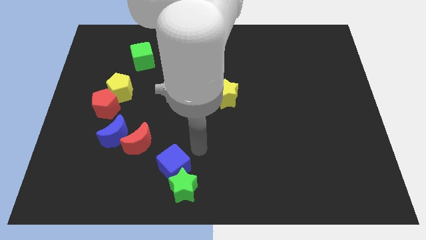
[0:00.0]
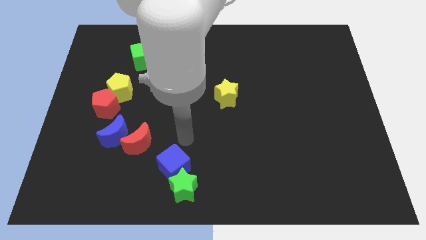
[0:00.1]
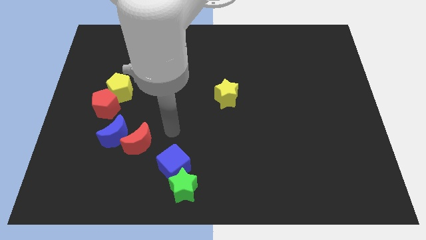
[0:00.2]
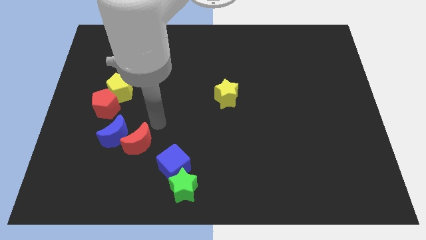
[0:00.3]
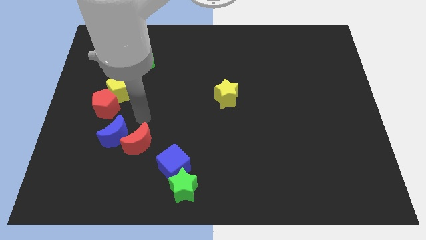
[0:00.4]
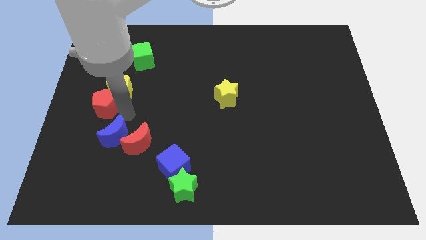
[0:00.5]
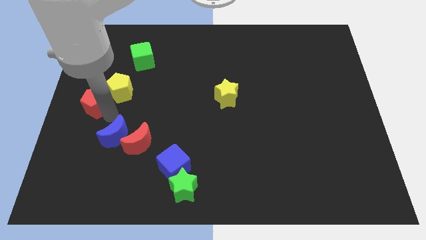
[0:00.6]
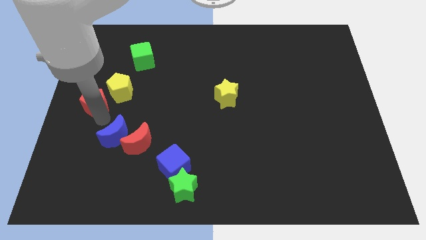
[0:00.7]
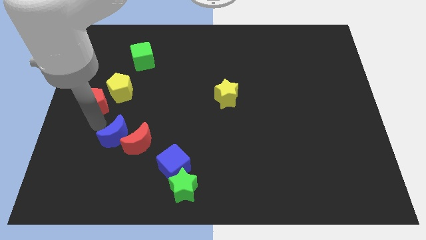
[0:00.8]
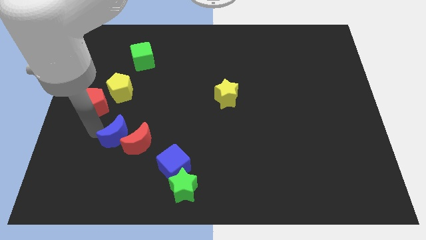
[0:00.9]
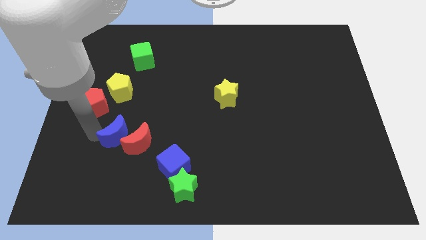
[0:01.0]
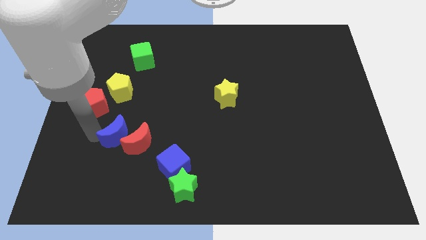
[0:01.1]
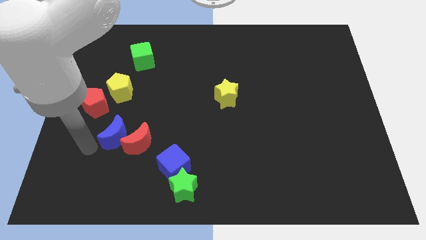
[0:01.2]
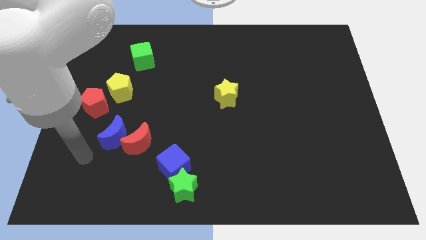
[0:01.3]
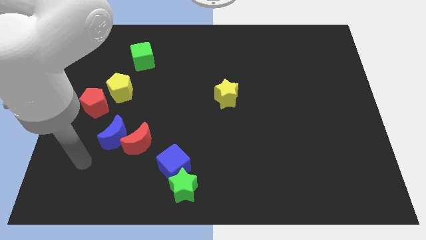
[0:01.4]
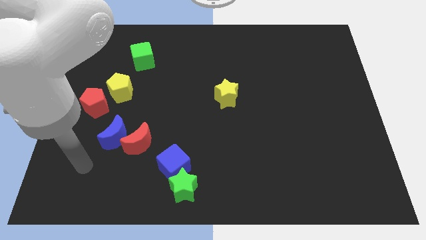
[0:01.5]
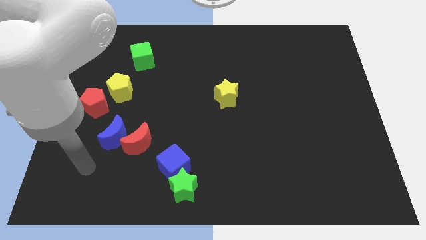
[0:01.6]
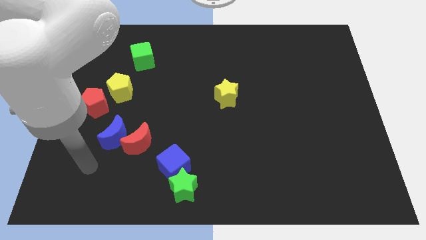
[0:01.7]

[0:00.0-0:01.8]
slightly push the red pentagon to left

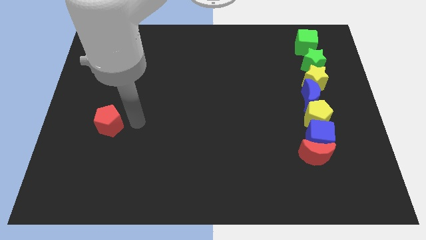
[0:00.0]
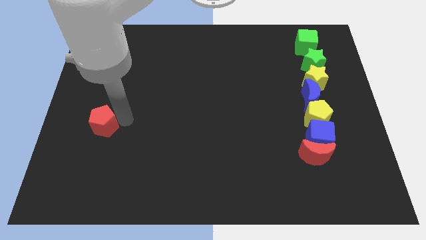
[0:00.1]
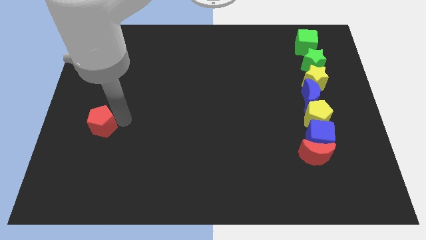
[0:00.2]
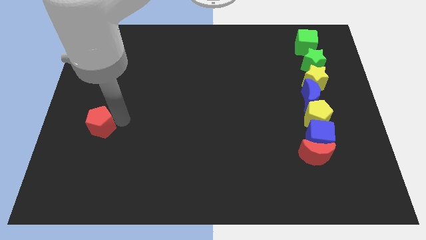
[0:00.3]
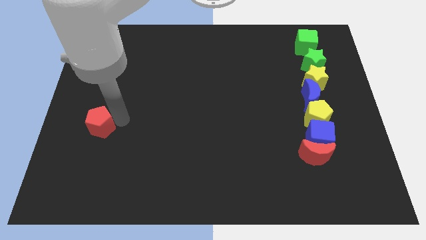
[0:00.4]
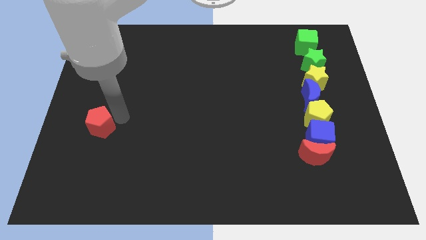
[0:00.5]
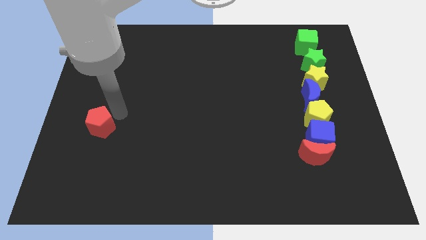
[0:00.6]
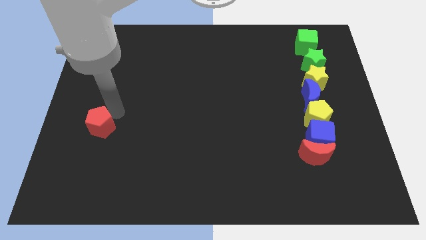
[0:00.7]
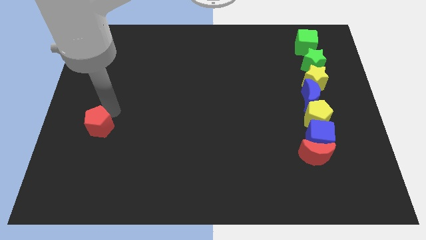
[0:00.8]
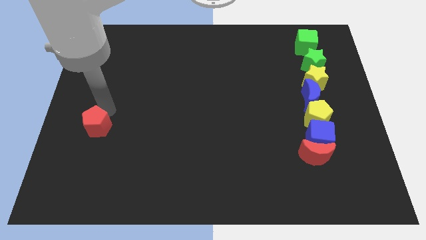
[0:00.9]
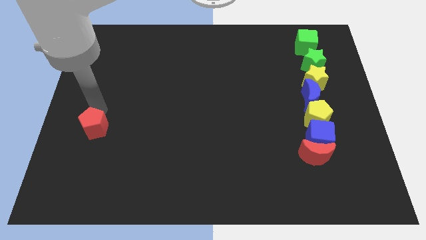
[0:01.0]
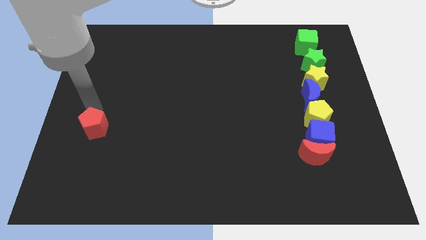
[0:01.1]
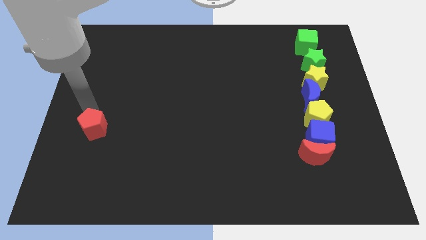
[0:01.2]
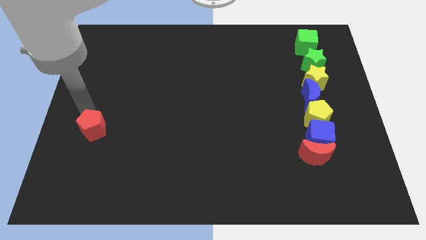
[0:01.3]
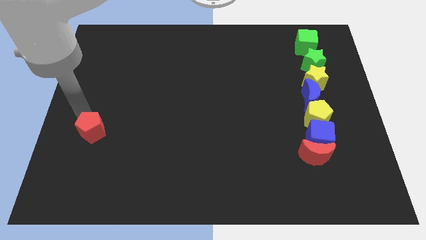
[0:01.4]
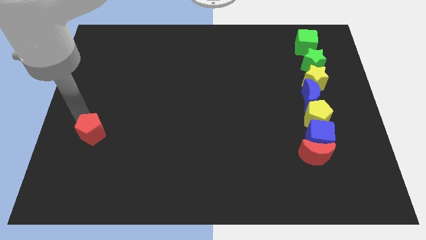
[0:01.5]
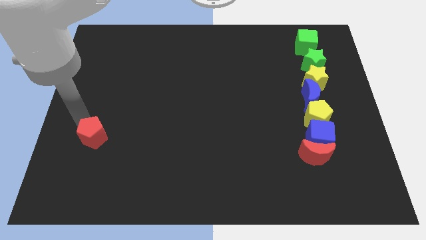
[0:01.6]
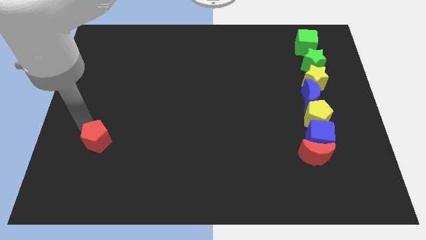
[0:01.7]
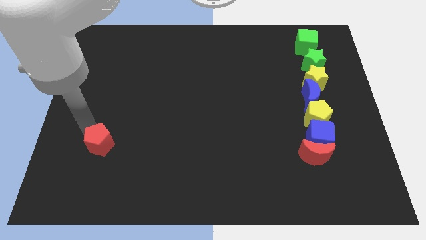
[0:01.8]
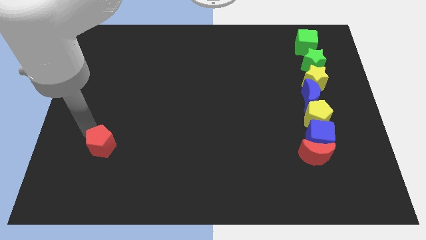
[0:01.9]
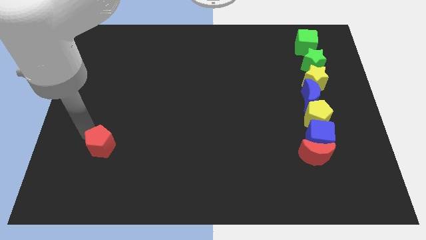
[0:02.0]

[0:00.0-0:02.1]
push the red pentagon slightly towards the bottom side of the board

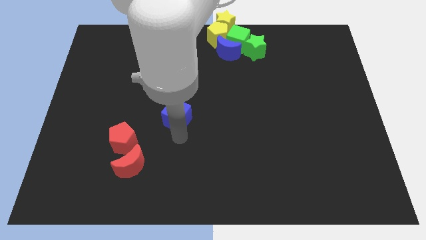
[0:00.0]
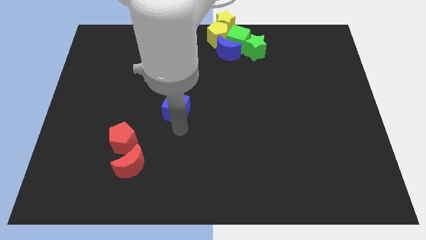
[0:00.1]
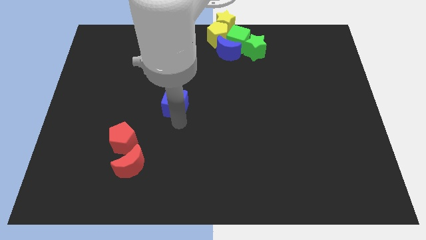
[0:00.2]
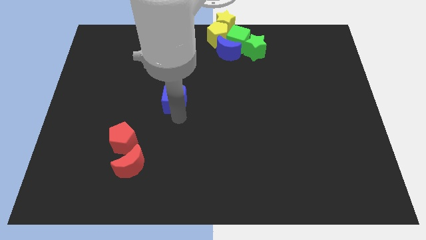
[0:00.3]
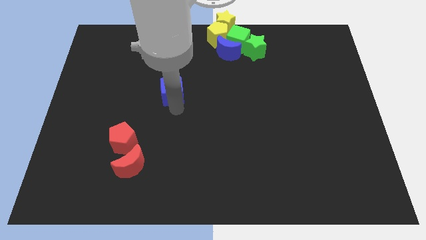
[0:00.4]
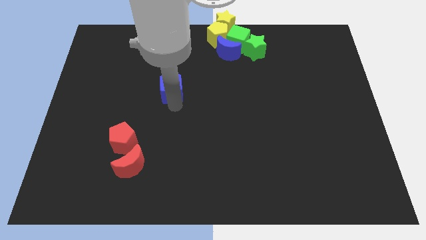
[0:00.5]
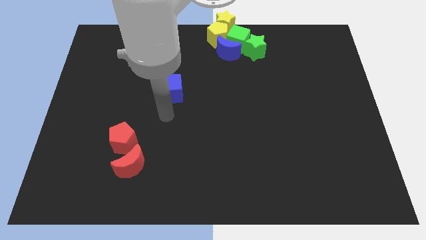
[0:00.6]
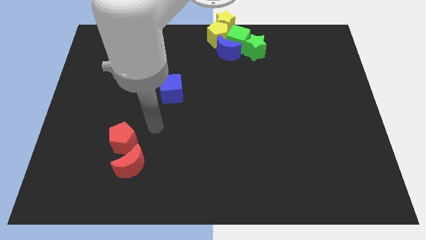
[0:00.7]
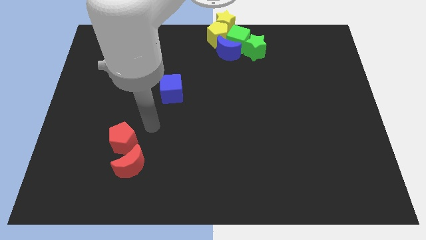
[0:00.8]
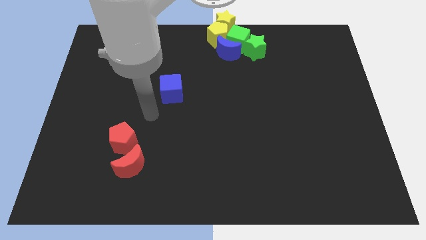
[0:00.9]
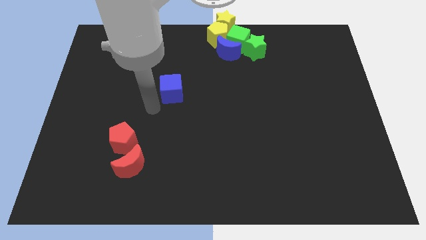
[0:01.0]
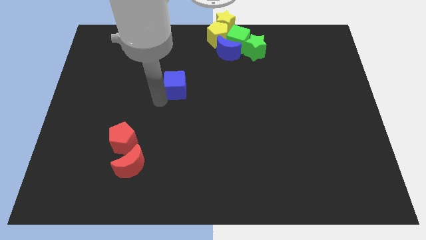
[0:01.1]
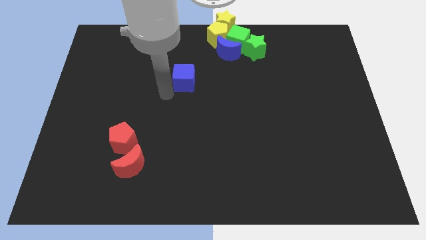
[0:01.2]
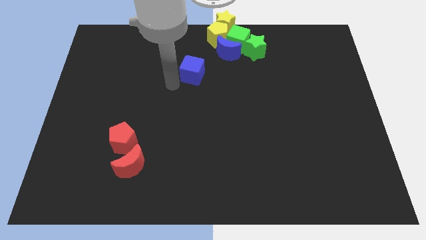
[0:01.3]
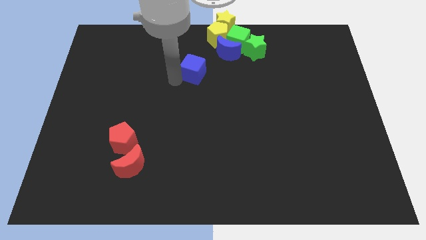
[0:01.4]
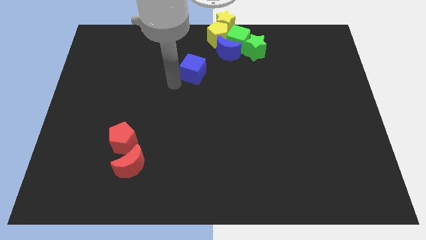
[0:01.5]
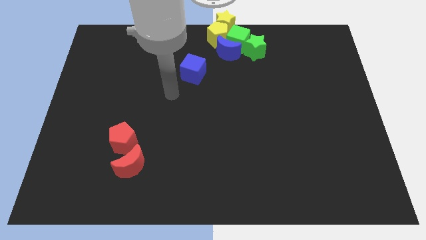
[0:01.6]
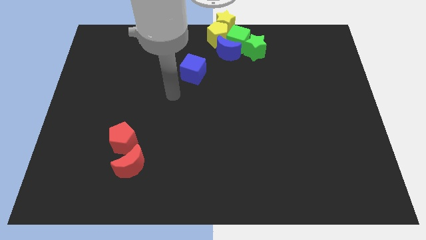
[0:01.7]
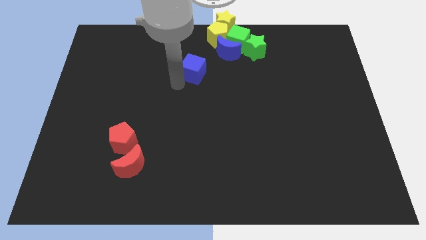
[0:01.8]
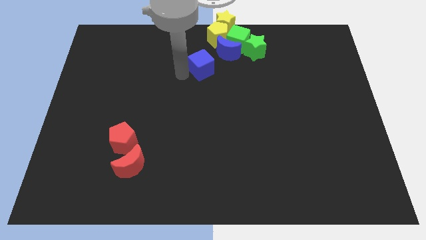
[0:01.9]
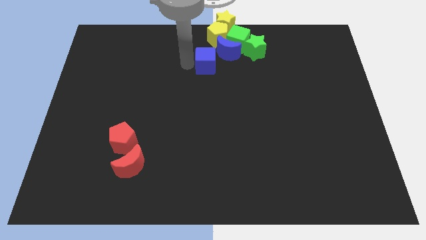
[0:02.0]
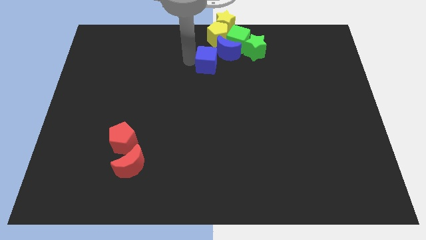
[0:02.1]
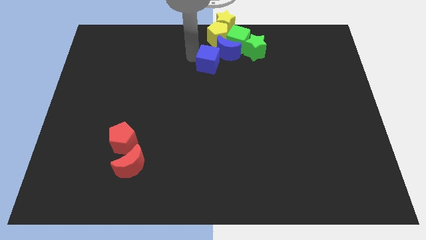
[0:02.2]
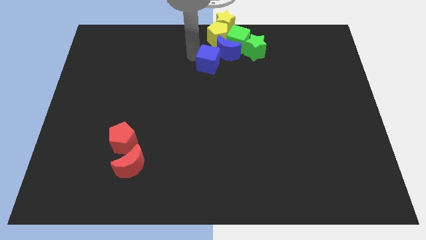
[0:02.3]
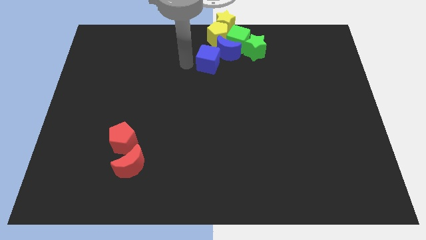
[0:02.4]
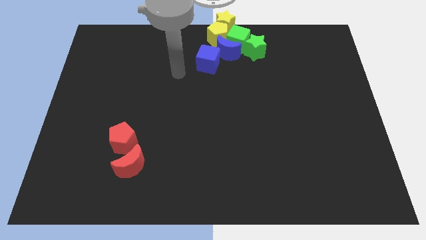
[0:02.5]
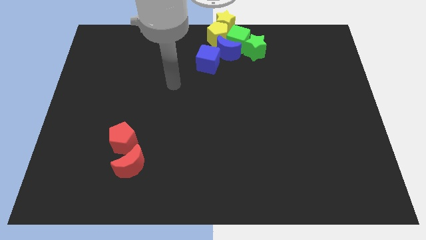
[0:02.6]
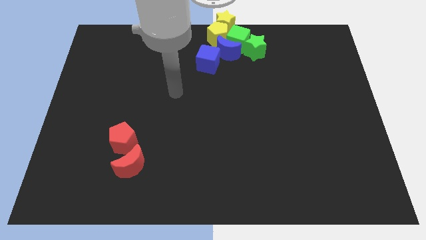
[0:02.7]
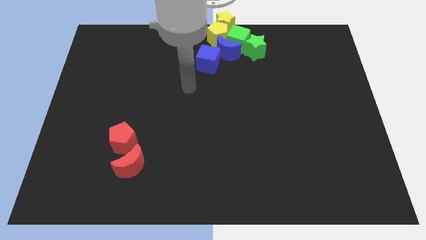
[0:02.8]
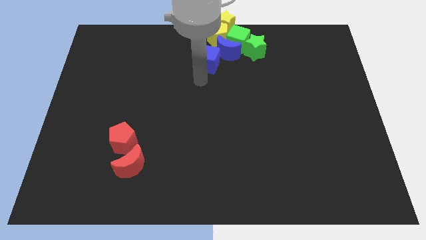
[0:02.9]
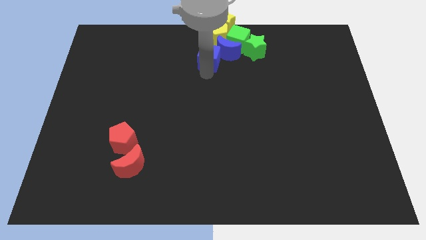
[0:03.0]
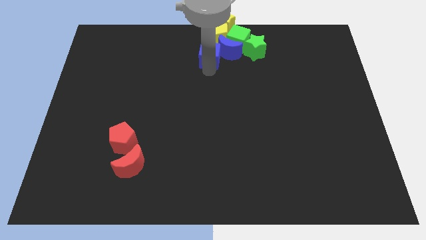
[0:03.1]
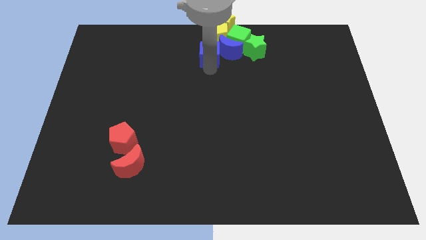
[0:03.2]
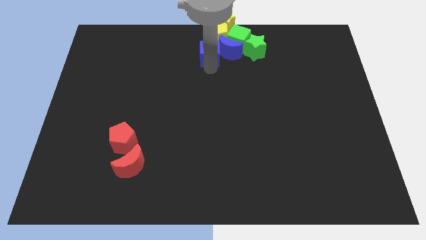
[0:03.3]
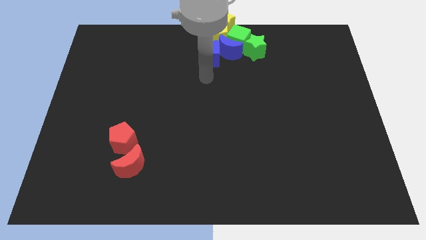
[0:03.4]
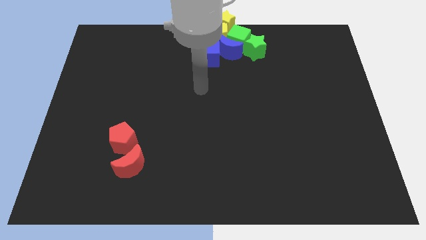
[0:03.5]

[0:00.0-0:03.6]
slide the blue cube into the blue moon

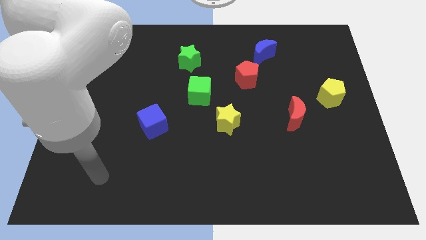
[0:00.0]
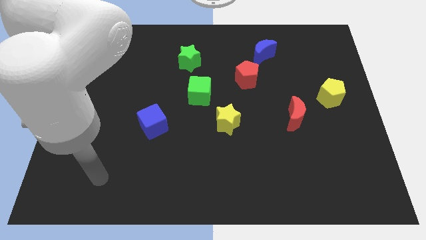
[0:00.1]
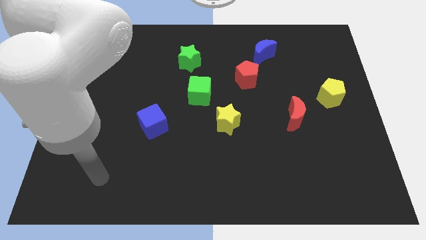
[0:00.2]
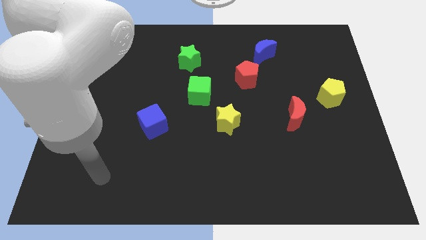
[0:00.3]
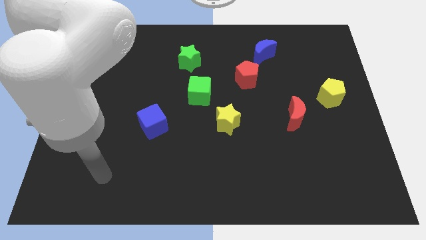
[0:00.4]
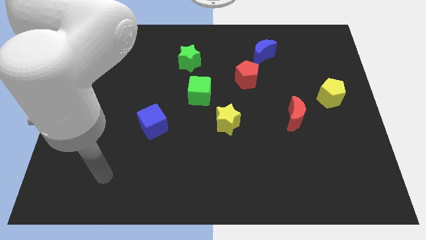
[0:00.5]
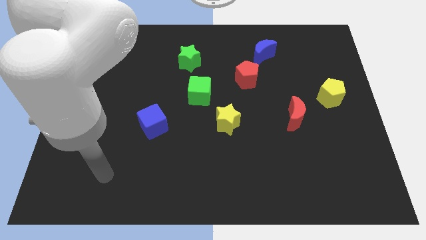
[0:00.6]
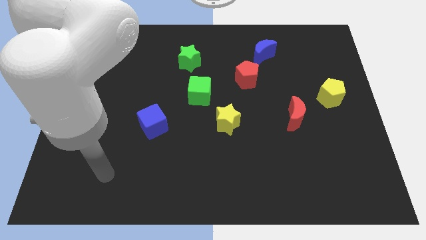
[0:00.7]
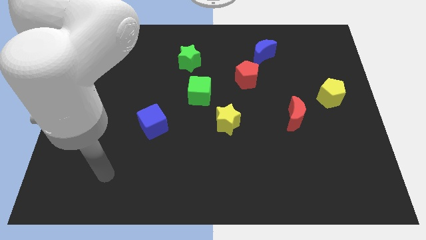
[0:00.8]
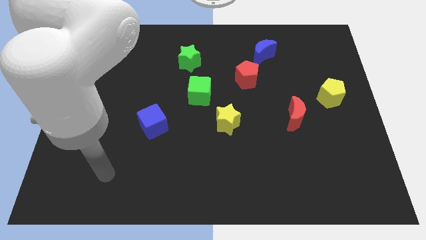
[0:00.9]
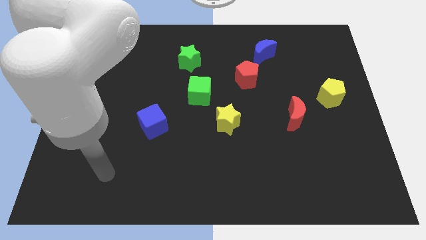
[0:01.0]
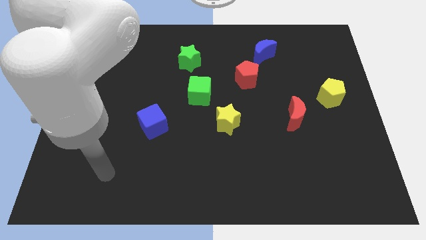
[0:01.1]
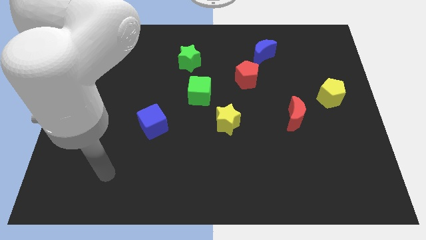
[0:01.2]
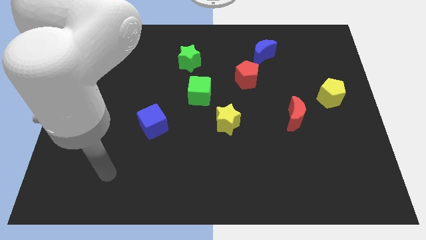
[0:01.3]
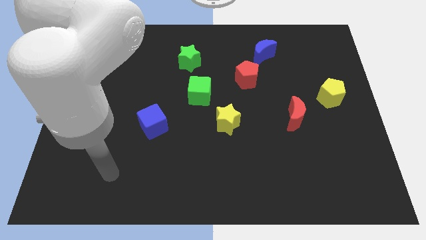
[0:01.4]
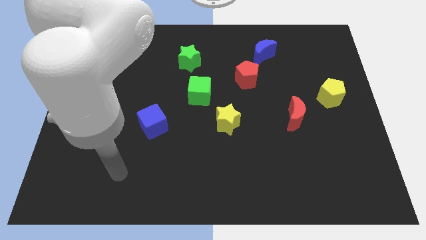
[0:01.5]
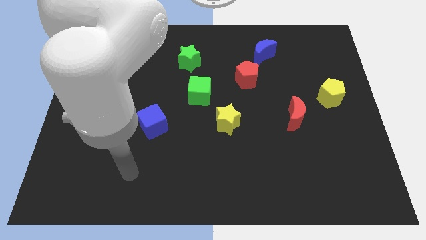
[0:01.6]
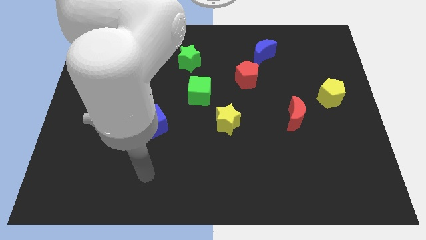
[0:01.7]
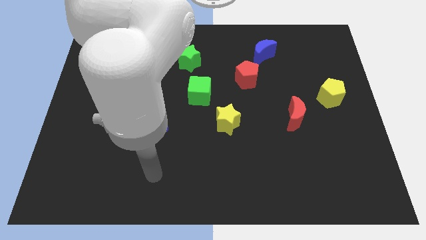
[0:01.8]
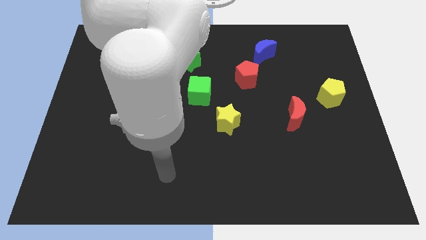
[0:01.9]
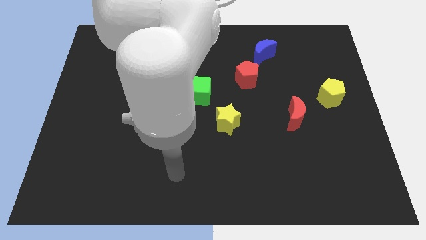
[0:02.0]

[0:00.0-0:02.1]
place your arm to the left below the yellow star
